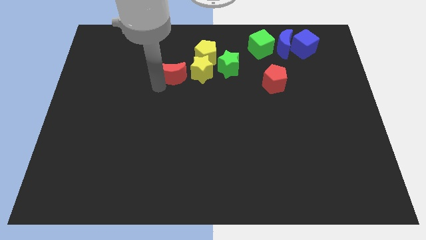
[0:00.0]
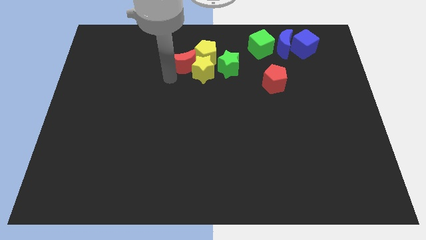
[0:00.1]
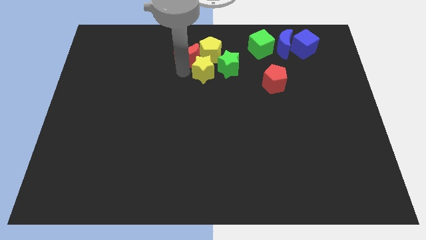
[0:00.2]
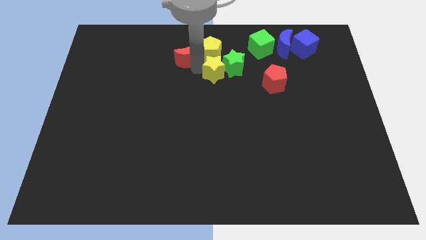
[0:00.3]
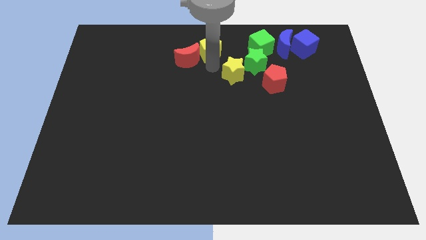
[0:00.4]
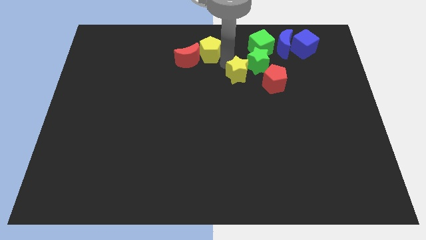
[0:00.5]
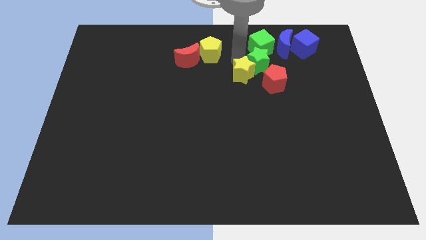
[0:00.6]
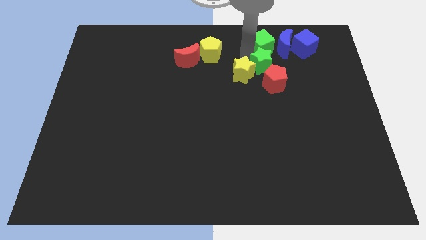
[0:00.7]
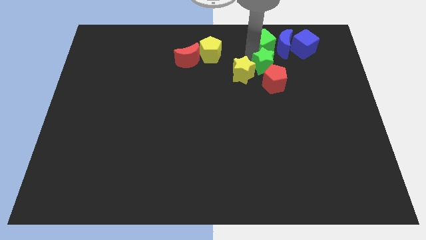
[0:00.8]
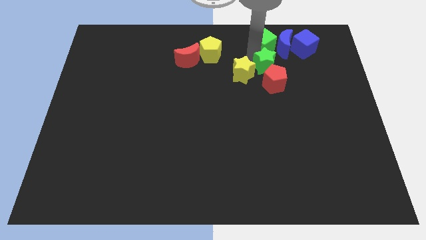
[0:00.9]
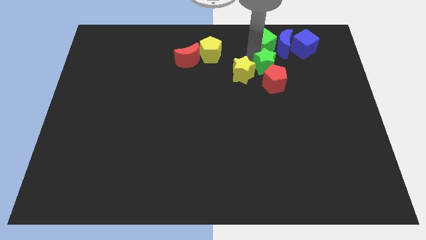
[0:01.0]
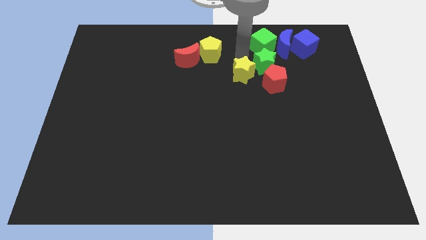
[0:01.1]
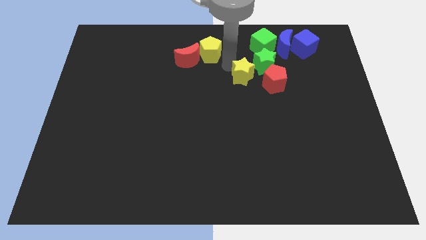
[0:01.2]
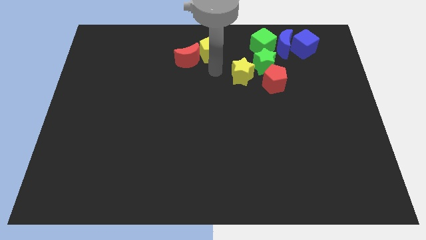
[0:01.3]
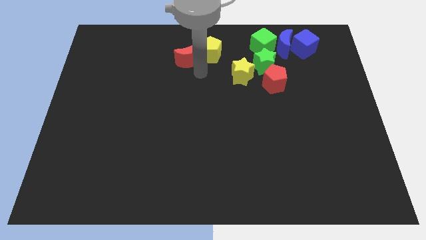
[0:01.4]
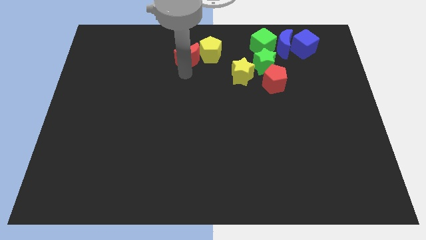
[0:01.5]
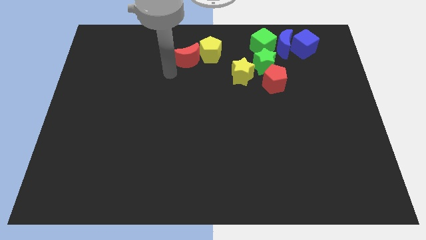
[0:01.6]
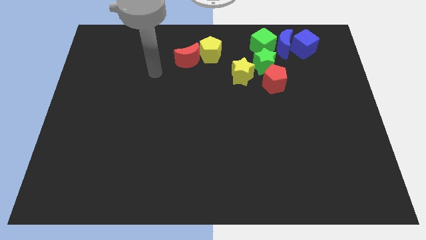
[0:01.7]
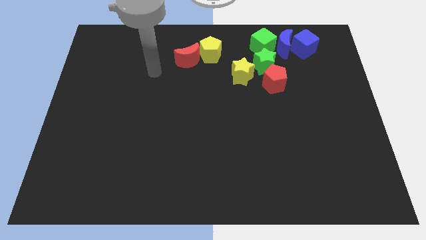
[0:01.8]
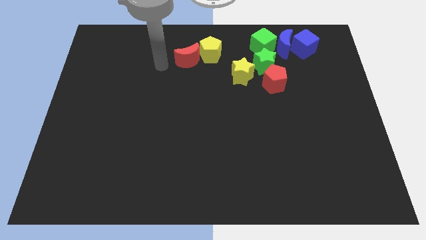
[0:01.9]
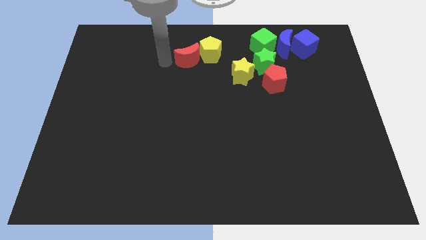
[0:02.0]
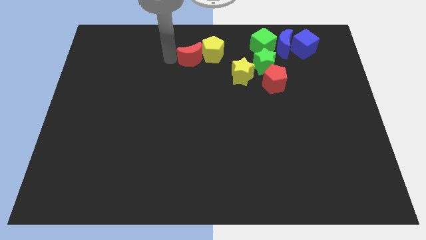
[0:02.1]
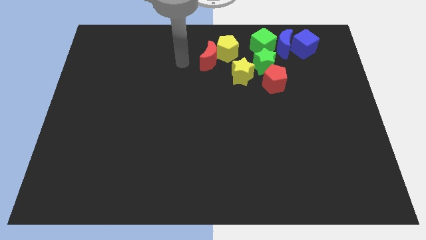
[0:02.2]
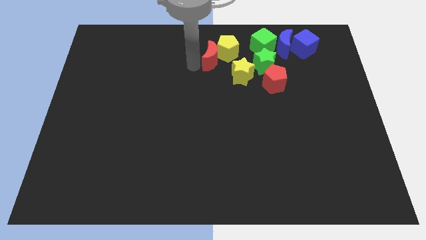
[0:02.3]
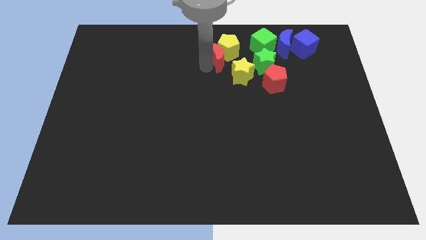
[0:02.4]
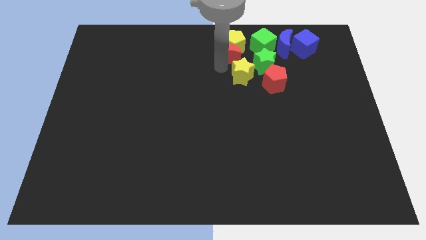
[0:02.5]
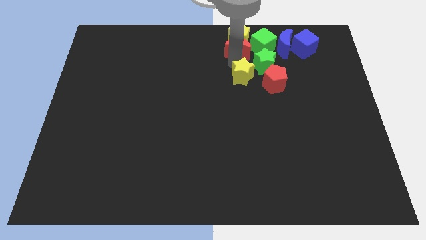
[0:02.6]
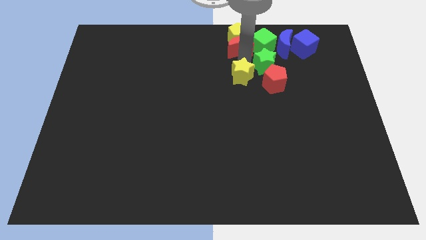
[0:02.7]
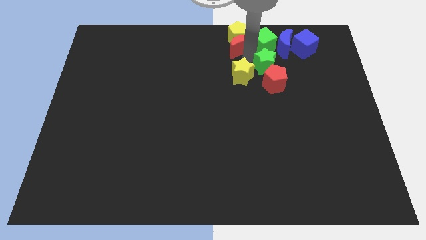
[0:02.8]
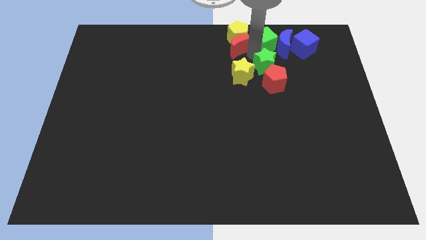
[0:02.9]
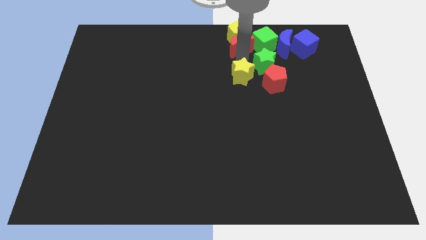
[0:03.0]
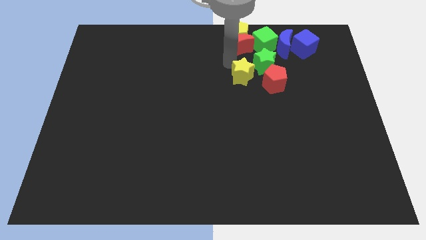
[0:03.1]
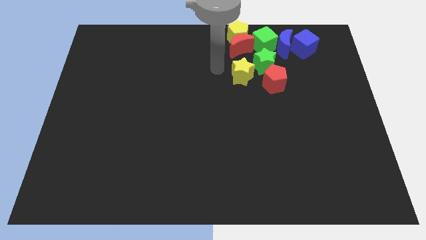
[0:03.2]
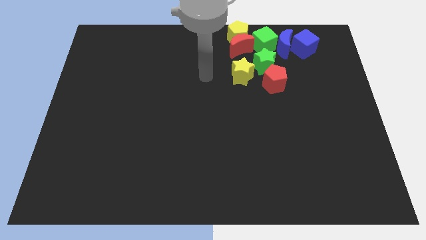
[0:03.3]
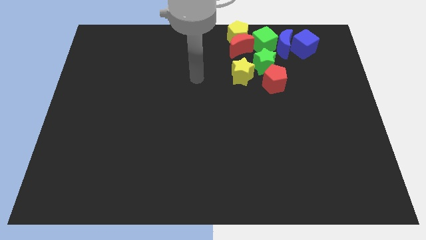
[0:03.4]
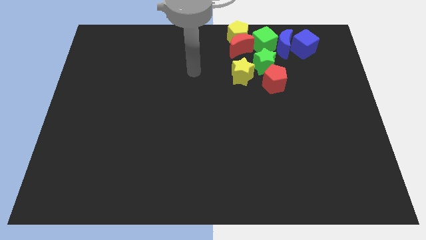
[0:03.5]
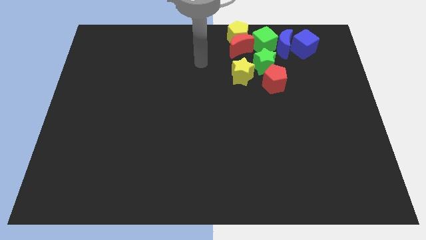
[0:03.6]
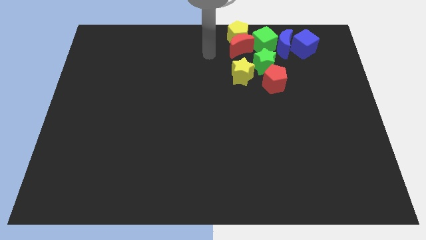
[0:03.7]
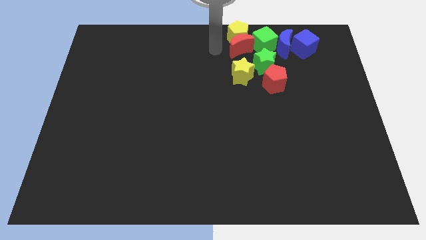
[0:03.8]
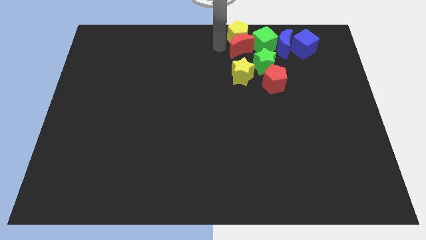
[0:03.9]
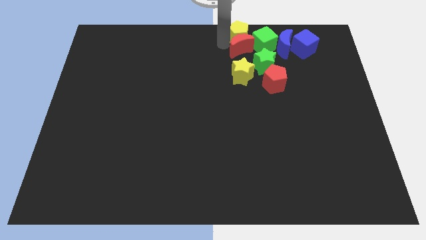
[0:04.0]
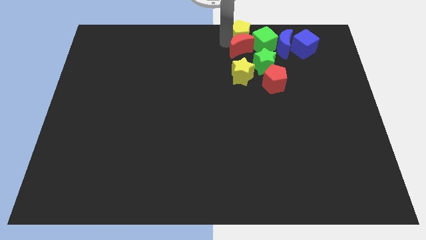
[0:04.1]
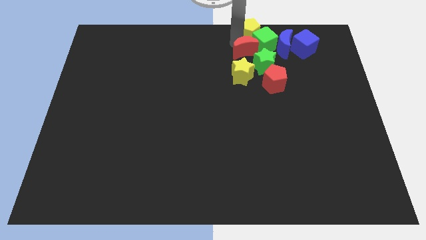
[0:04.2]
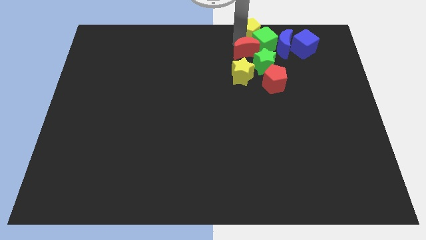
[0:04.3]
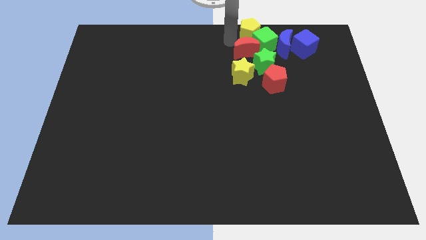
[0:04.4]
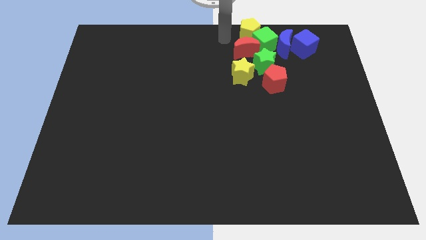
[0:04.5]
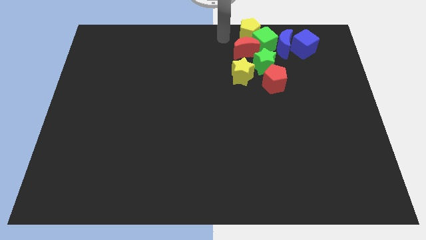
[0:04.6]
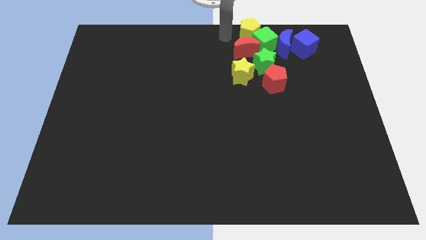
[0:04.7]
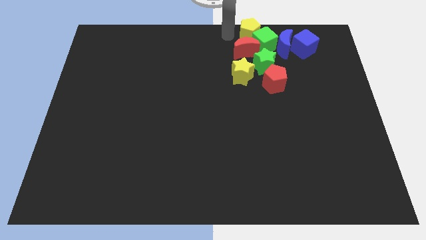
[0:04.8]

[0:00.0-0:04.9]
push the group of blocks from the top center to the right

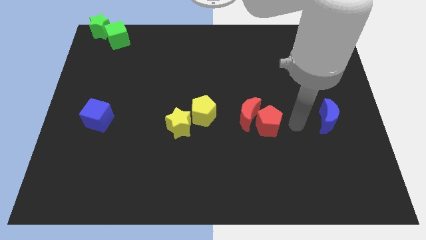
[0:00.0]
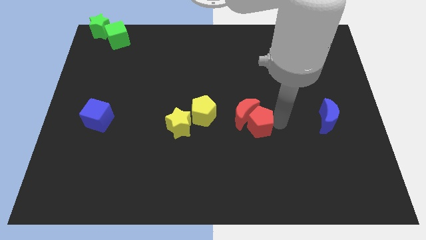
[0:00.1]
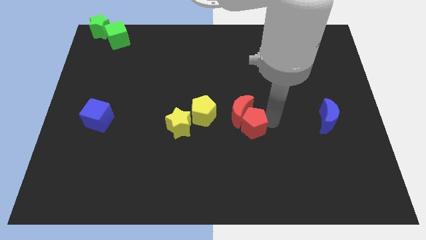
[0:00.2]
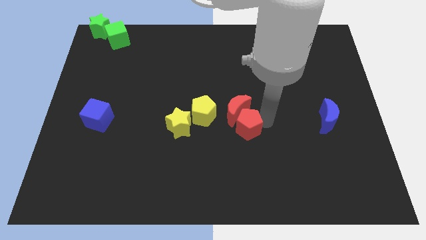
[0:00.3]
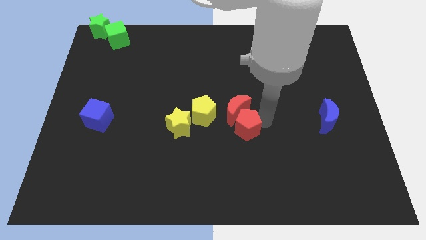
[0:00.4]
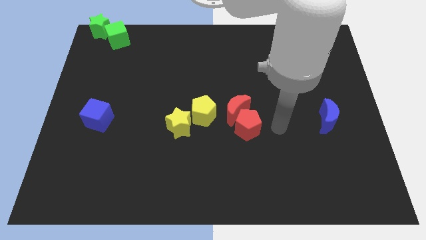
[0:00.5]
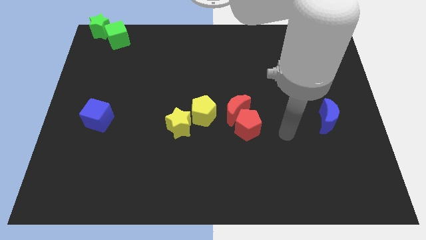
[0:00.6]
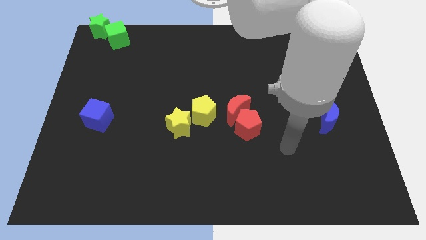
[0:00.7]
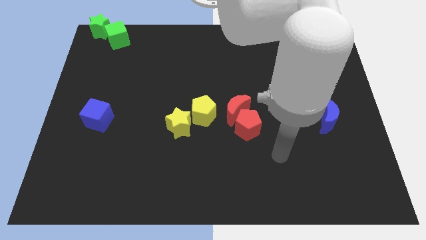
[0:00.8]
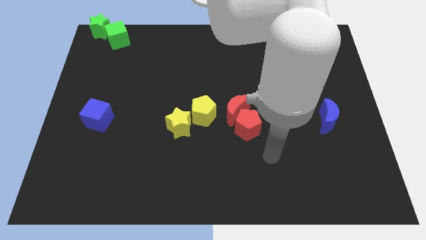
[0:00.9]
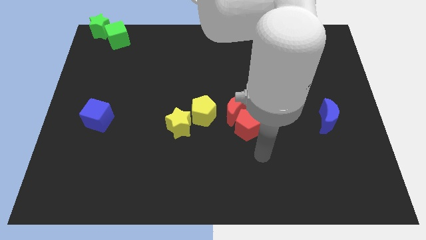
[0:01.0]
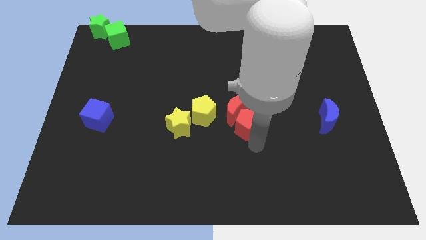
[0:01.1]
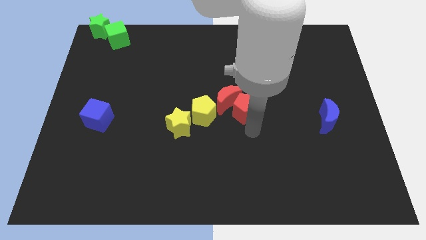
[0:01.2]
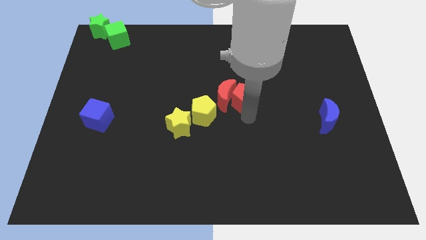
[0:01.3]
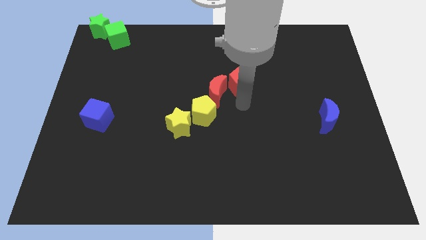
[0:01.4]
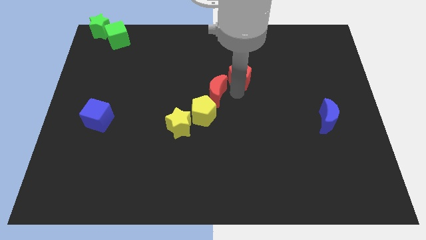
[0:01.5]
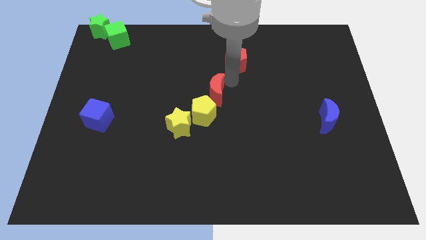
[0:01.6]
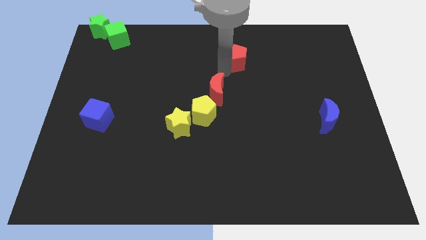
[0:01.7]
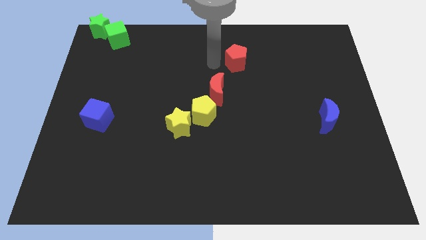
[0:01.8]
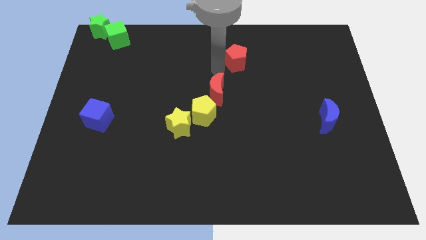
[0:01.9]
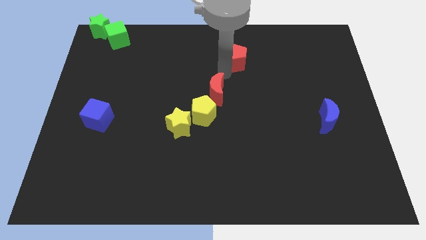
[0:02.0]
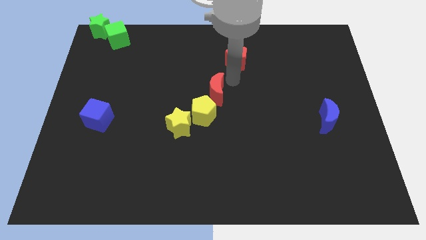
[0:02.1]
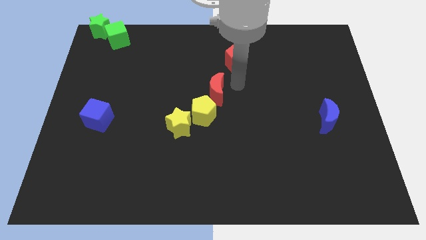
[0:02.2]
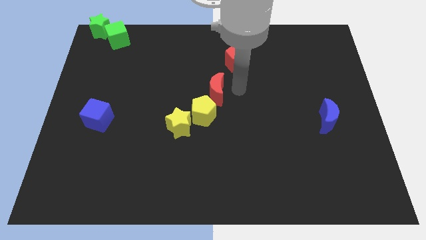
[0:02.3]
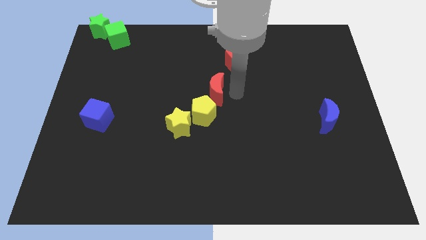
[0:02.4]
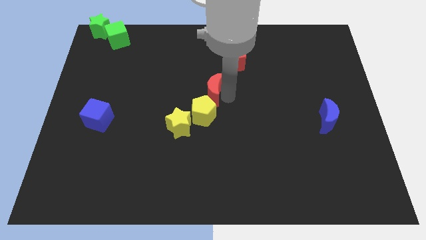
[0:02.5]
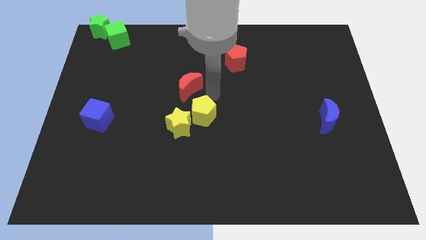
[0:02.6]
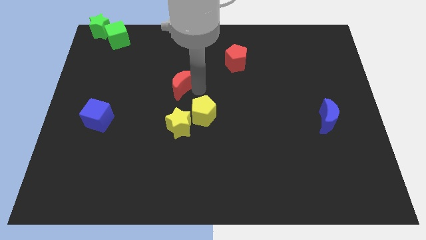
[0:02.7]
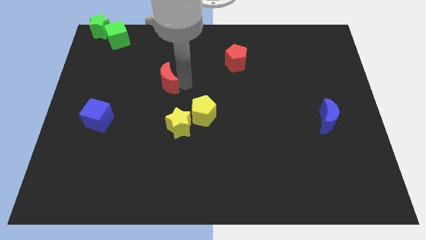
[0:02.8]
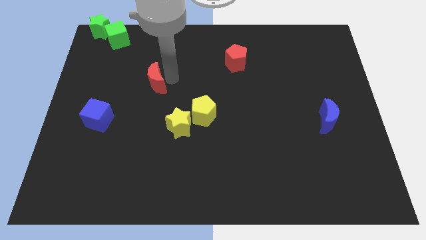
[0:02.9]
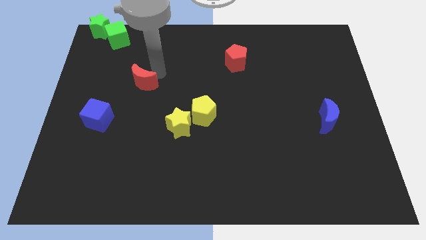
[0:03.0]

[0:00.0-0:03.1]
separate red blocks from each other

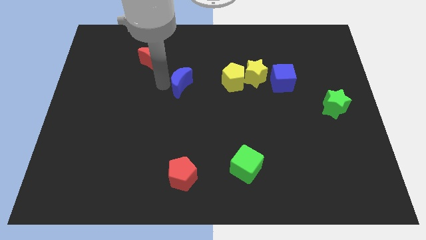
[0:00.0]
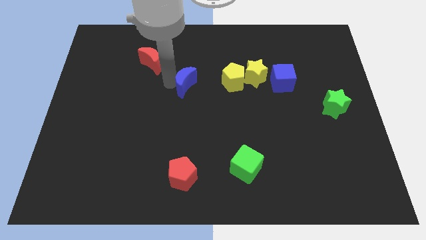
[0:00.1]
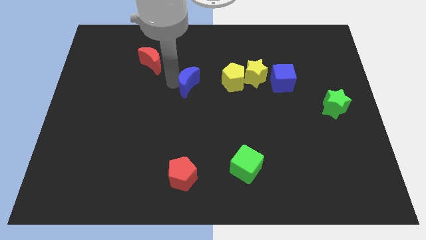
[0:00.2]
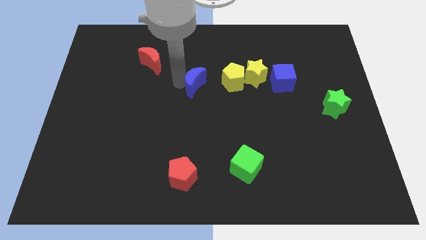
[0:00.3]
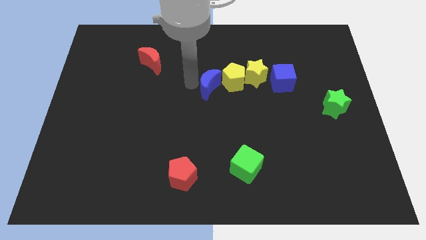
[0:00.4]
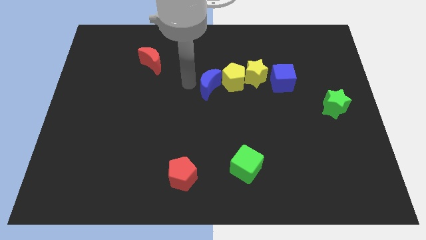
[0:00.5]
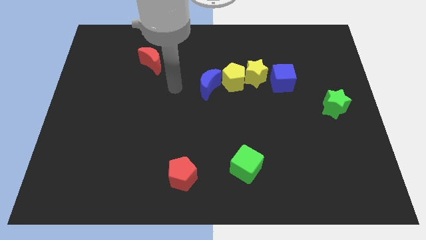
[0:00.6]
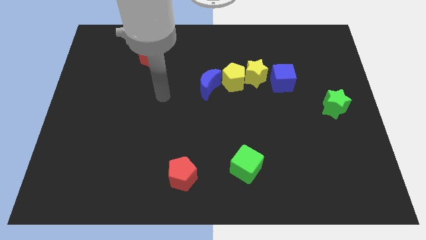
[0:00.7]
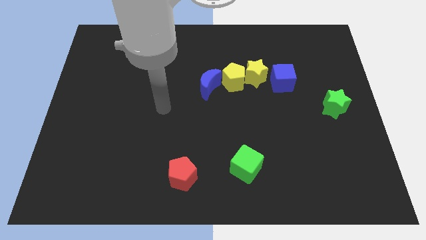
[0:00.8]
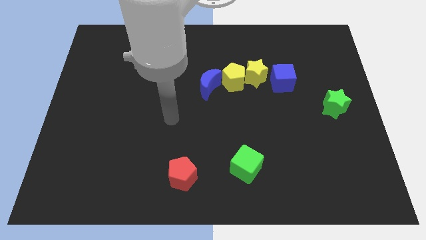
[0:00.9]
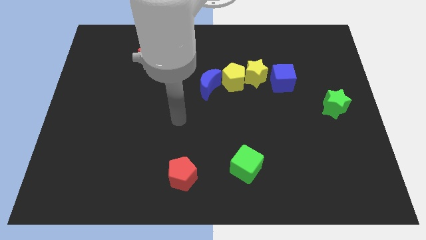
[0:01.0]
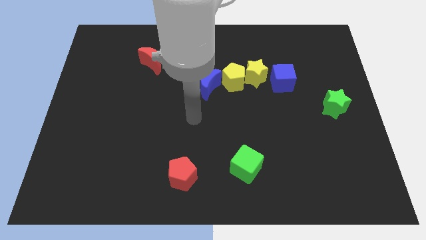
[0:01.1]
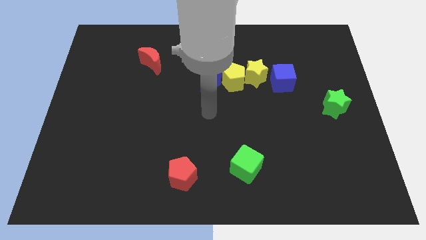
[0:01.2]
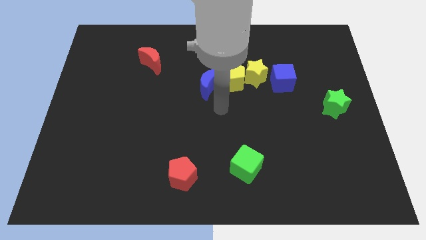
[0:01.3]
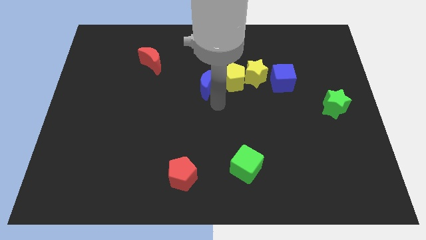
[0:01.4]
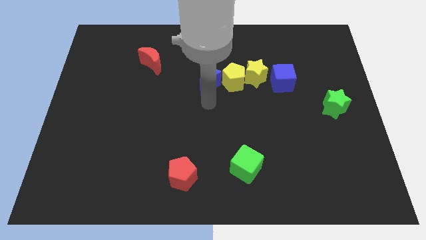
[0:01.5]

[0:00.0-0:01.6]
place the blue crescent horizontal to the left of the yellow pentagon
